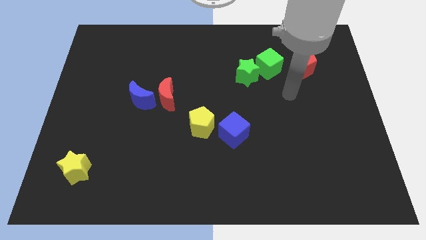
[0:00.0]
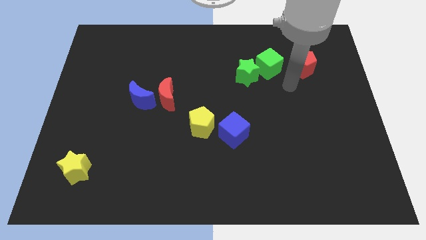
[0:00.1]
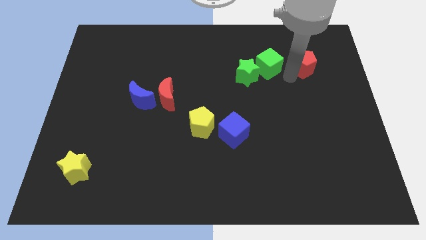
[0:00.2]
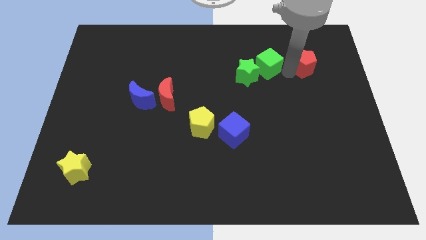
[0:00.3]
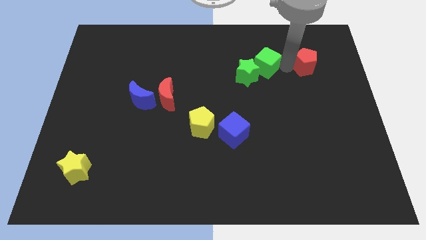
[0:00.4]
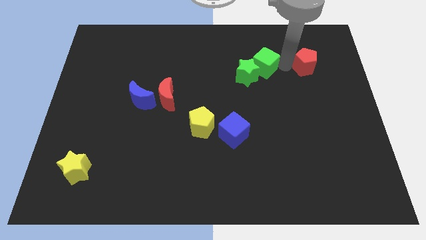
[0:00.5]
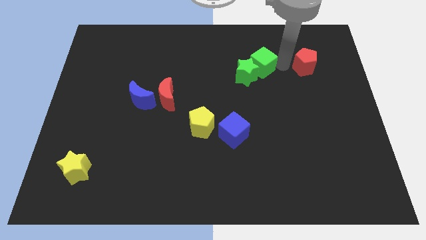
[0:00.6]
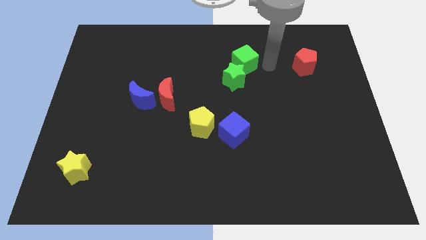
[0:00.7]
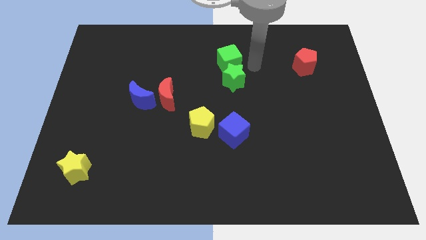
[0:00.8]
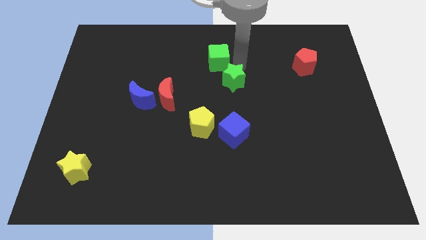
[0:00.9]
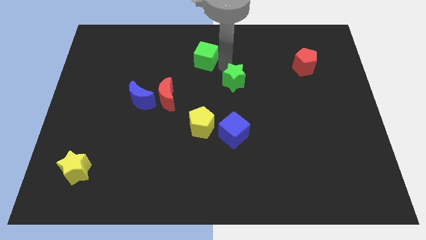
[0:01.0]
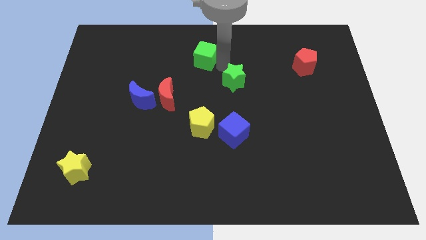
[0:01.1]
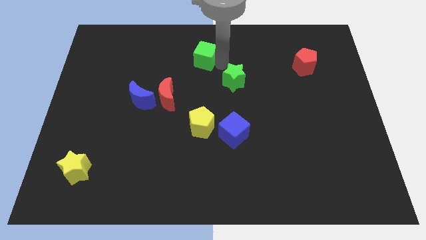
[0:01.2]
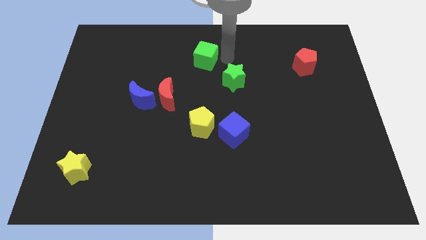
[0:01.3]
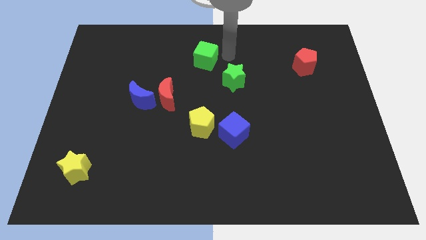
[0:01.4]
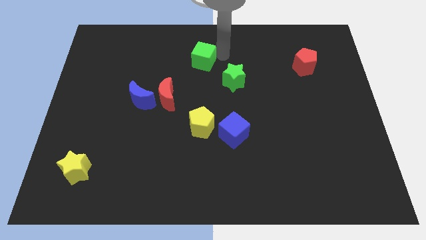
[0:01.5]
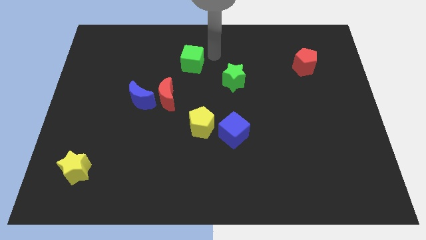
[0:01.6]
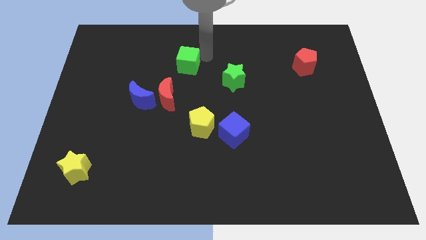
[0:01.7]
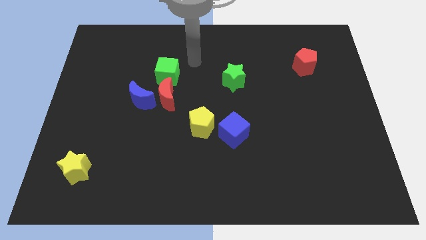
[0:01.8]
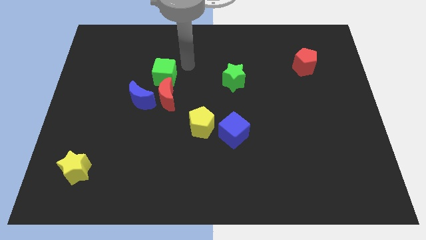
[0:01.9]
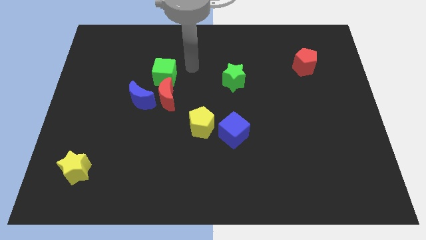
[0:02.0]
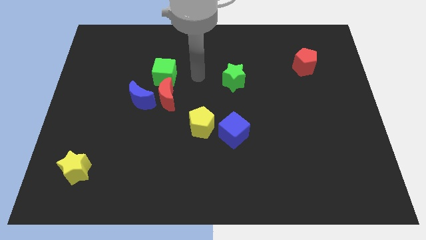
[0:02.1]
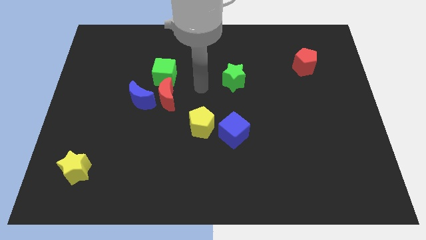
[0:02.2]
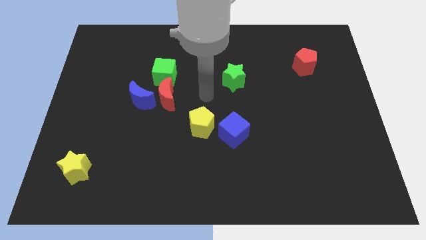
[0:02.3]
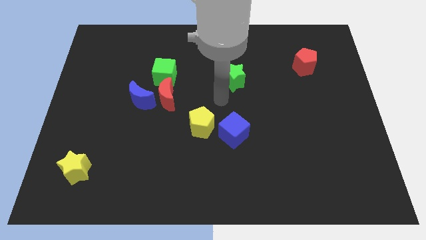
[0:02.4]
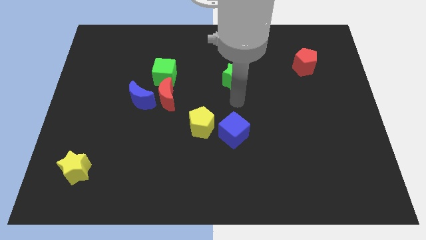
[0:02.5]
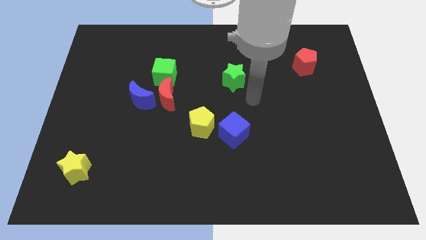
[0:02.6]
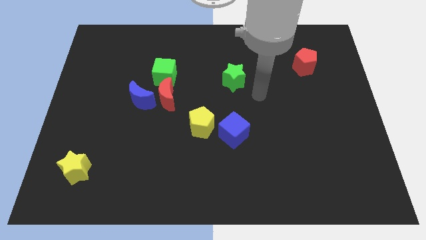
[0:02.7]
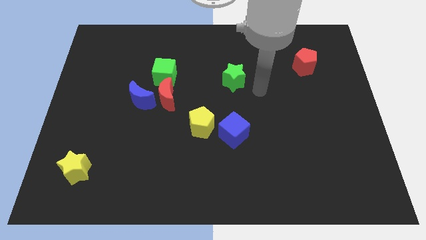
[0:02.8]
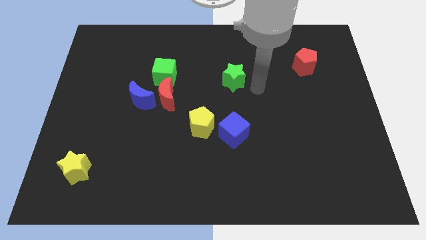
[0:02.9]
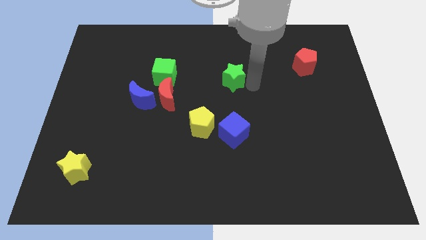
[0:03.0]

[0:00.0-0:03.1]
place the green cube above the red crescent

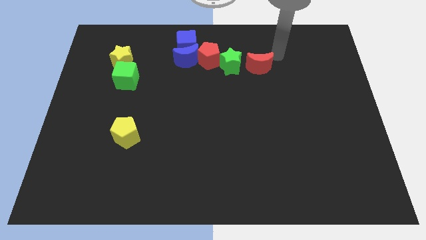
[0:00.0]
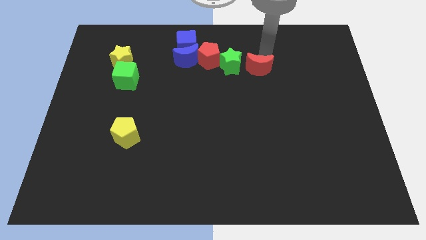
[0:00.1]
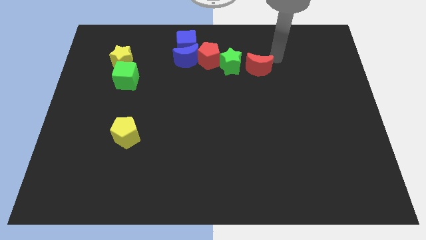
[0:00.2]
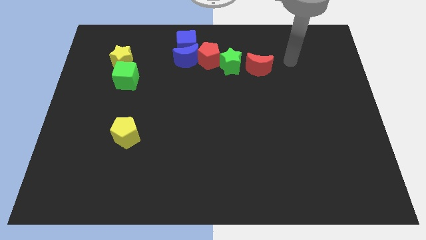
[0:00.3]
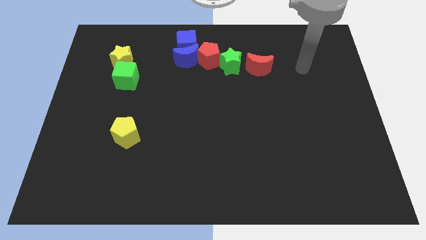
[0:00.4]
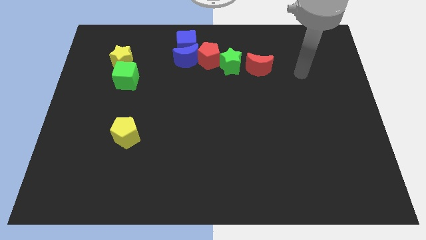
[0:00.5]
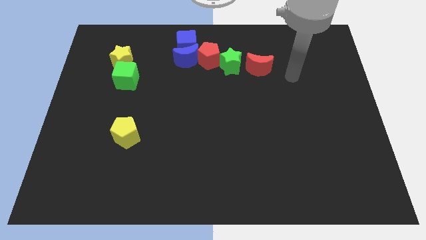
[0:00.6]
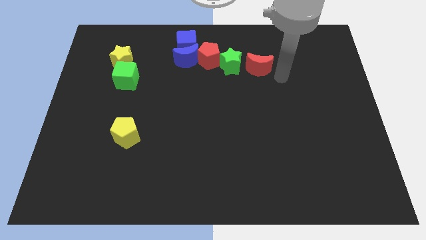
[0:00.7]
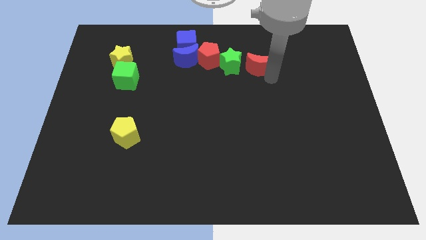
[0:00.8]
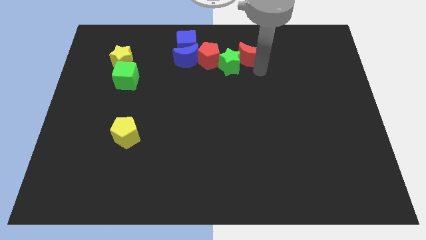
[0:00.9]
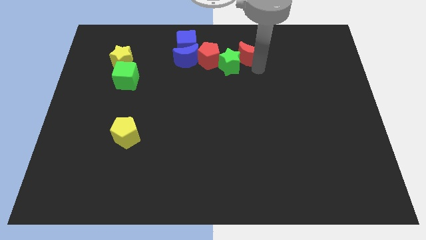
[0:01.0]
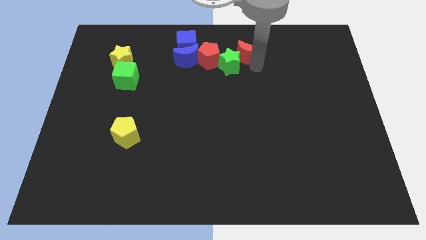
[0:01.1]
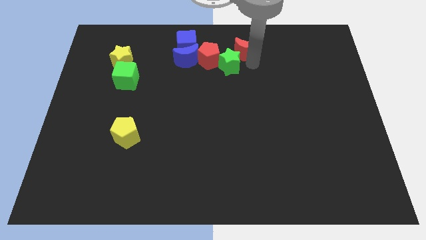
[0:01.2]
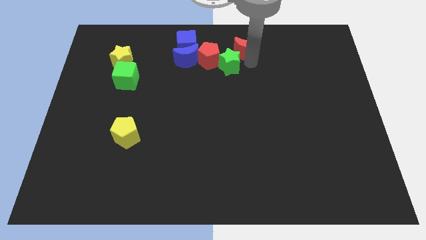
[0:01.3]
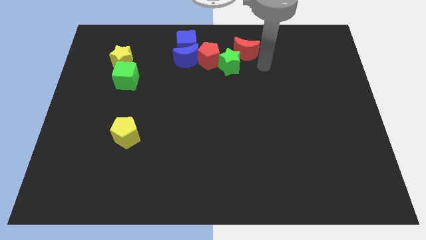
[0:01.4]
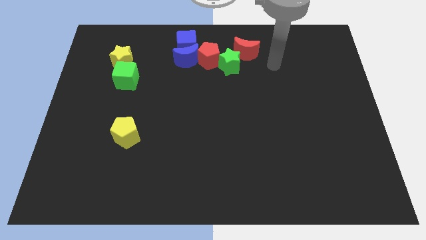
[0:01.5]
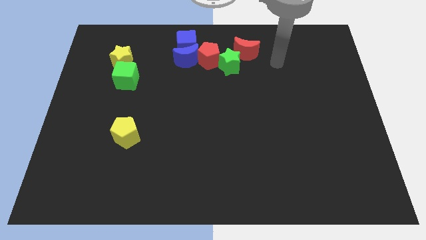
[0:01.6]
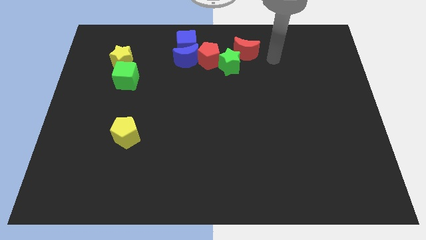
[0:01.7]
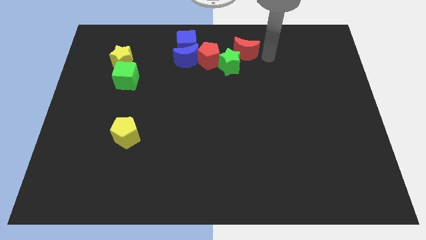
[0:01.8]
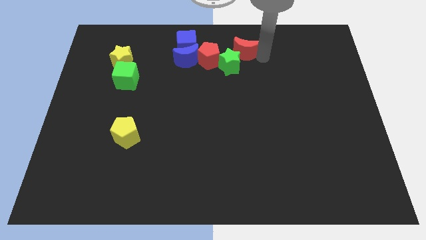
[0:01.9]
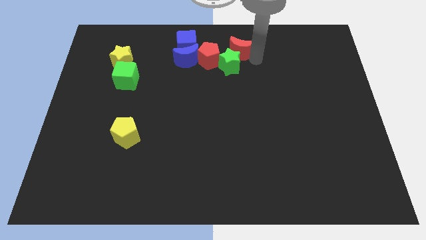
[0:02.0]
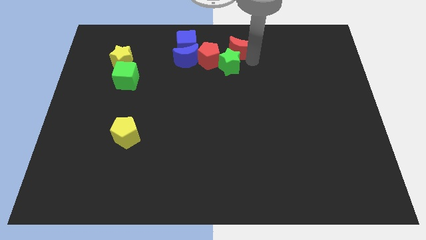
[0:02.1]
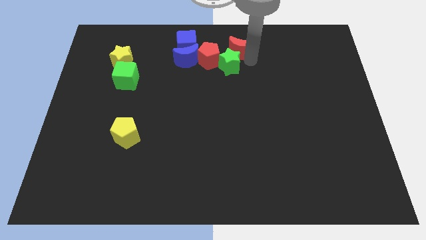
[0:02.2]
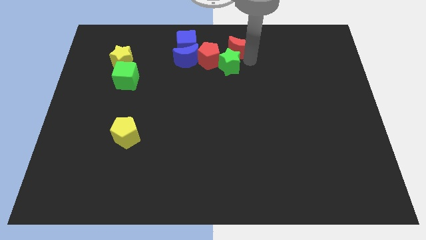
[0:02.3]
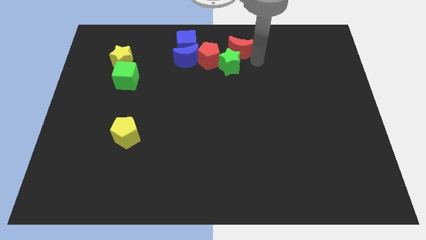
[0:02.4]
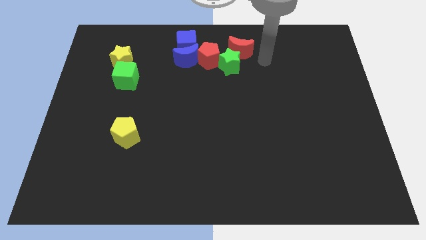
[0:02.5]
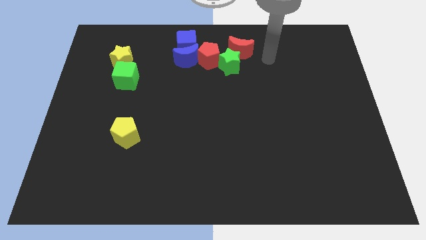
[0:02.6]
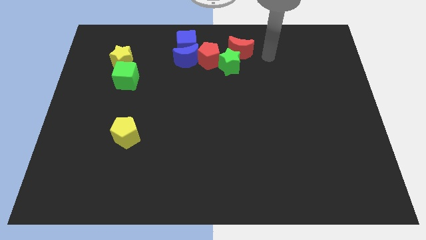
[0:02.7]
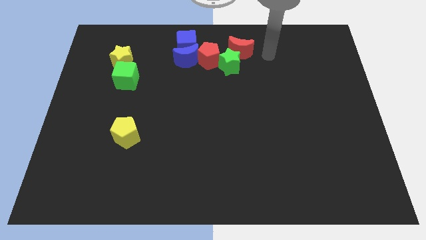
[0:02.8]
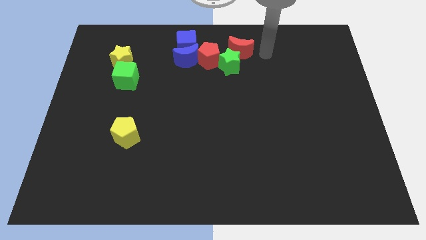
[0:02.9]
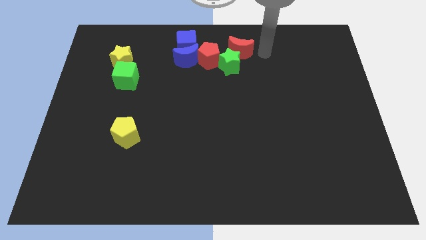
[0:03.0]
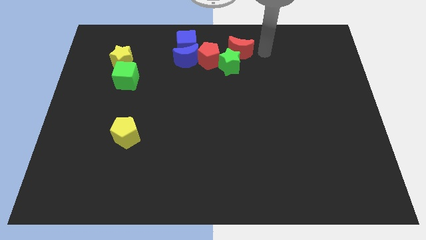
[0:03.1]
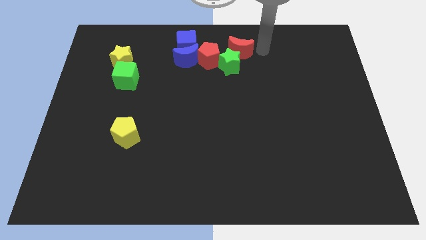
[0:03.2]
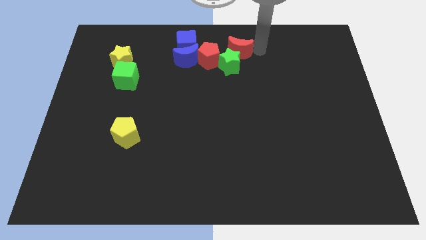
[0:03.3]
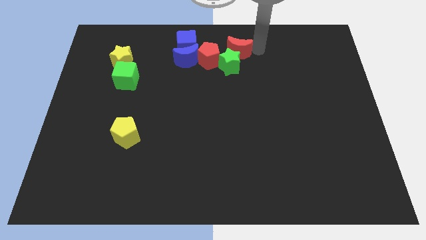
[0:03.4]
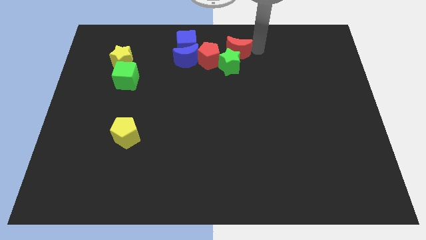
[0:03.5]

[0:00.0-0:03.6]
place the red moon on the top right side of green star

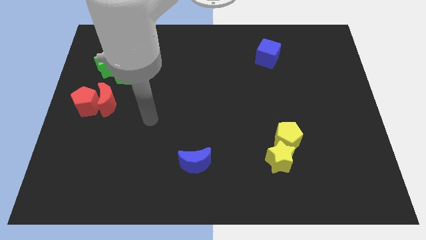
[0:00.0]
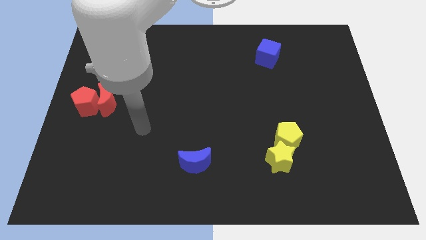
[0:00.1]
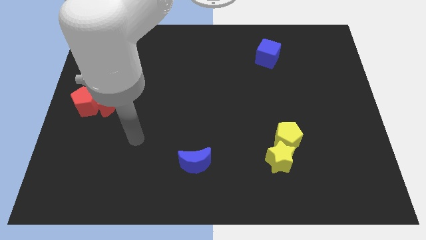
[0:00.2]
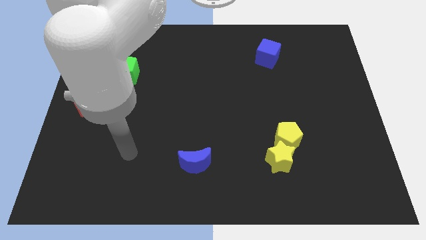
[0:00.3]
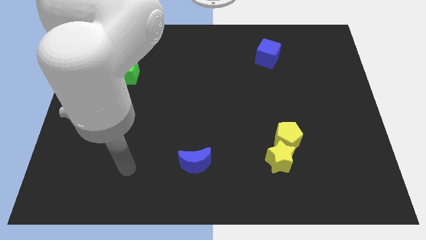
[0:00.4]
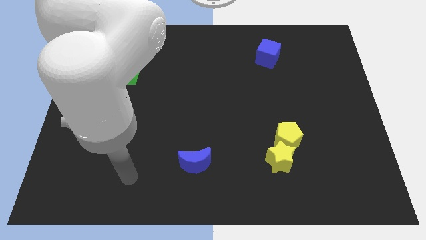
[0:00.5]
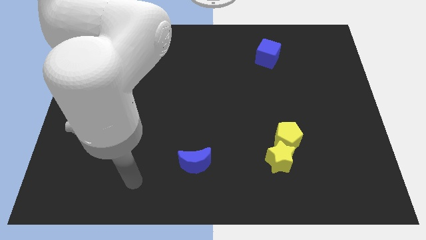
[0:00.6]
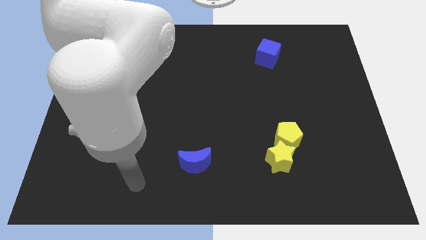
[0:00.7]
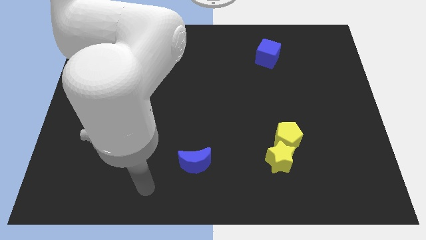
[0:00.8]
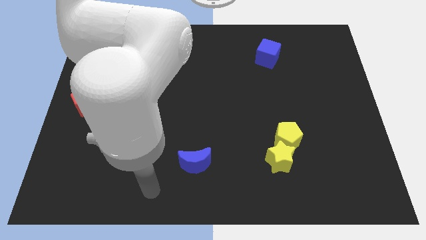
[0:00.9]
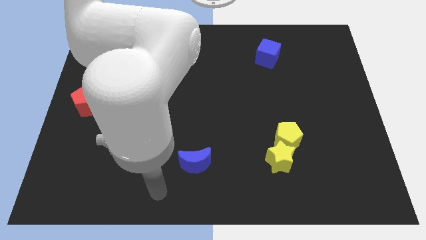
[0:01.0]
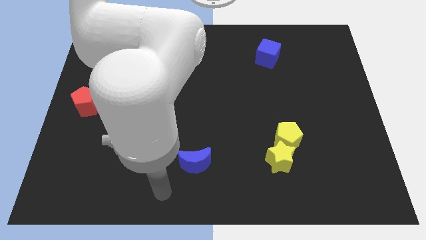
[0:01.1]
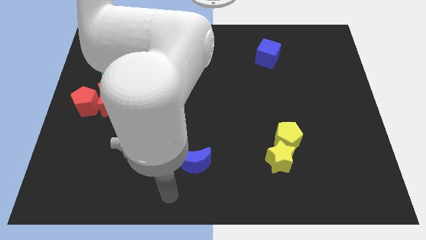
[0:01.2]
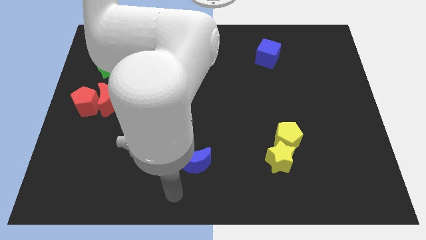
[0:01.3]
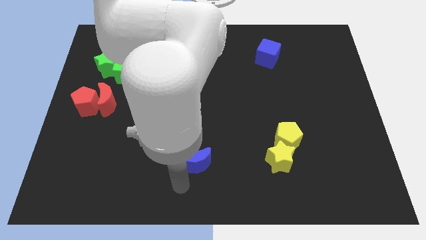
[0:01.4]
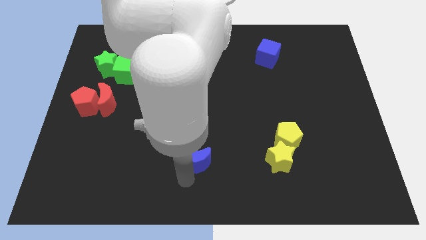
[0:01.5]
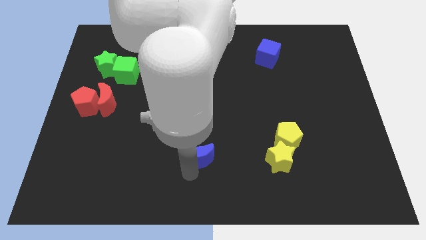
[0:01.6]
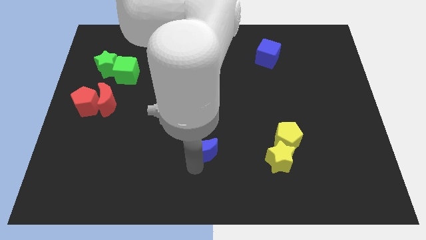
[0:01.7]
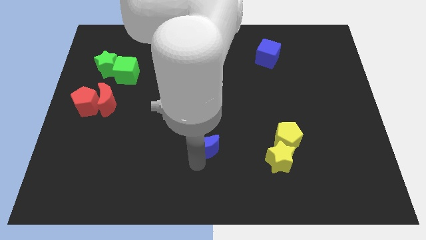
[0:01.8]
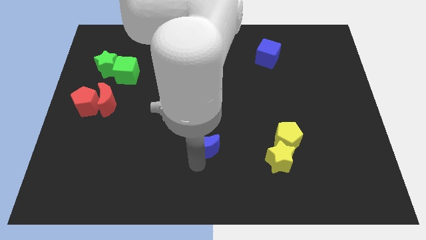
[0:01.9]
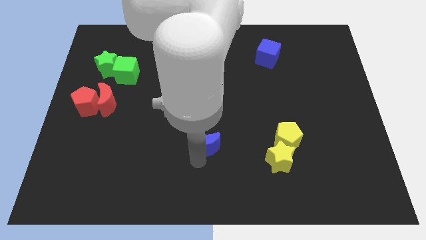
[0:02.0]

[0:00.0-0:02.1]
push the blue moon slightly up
